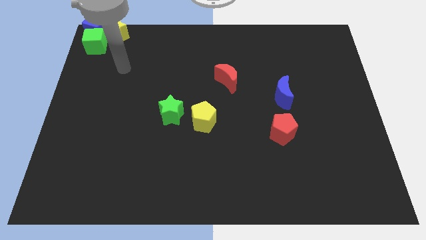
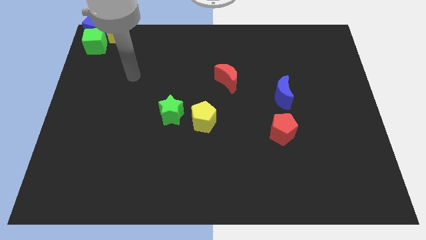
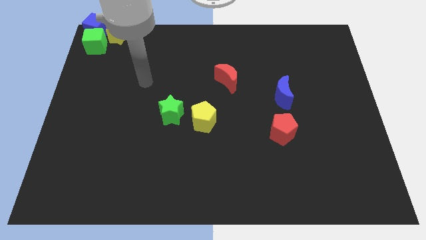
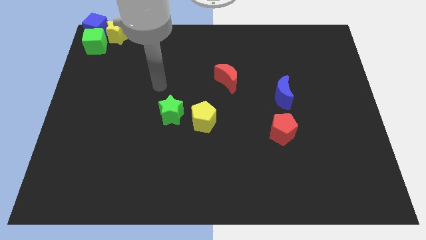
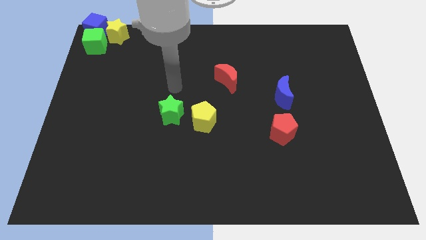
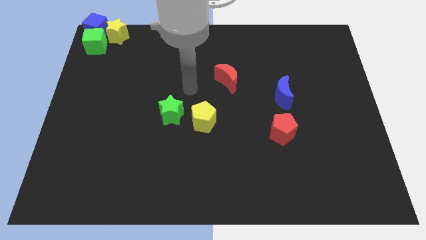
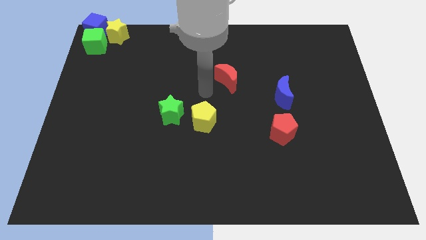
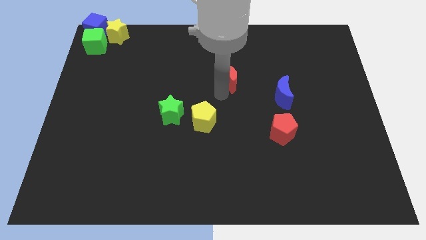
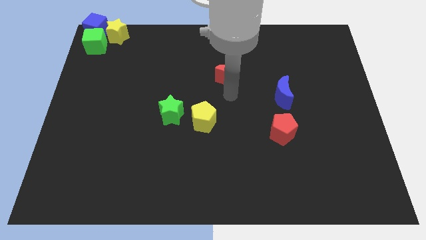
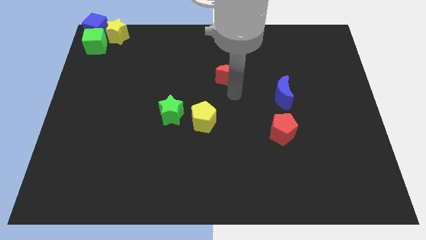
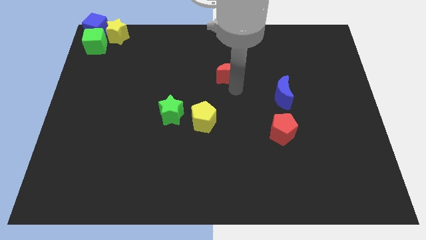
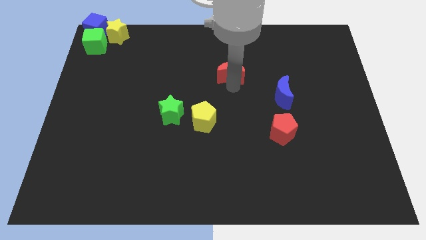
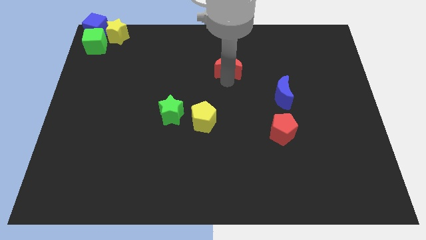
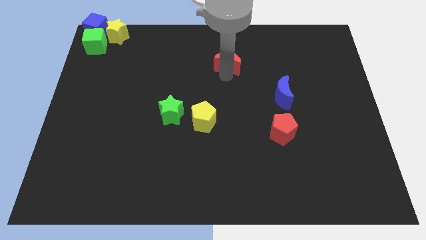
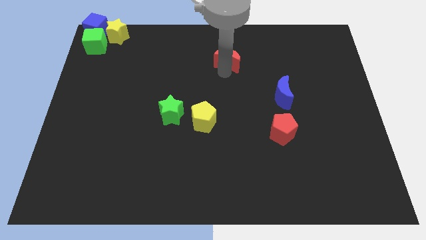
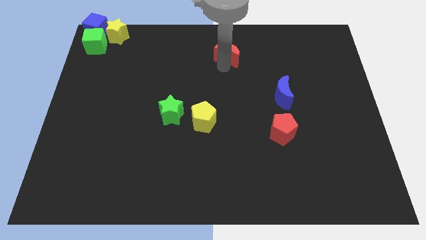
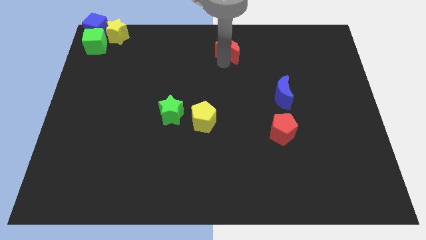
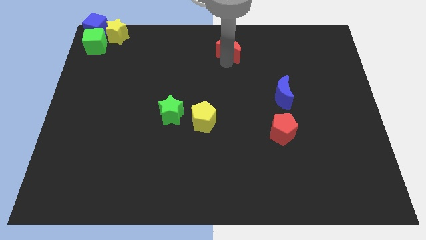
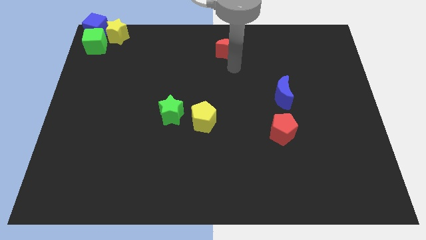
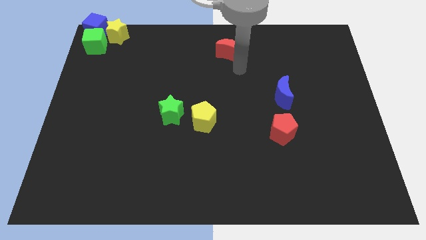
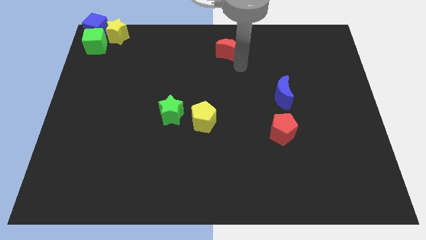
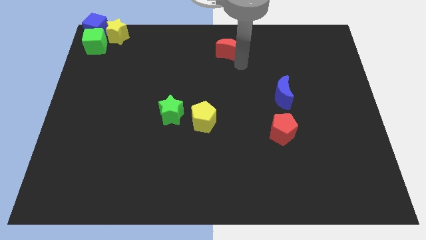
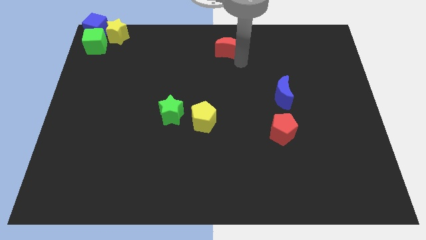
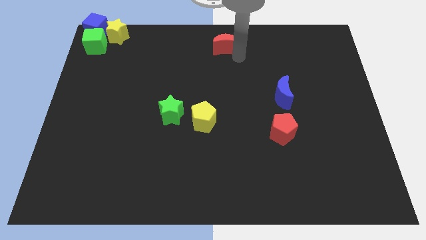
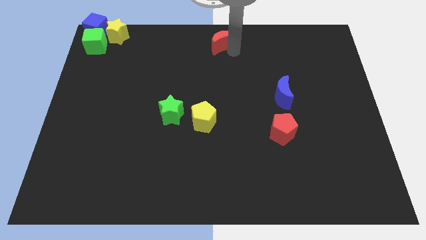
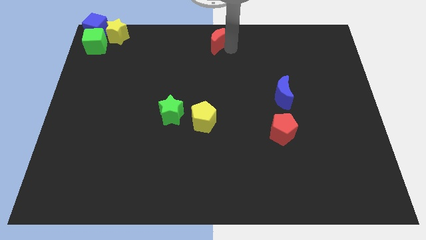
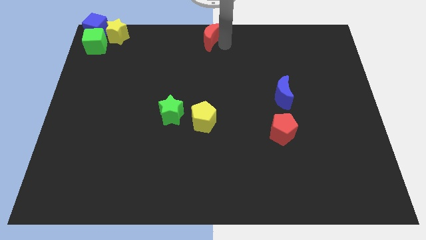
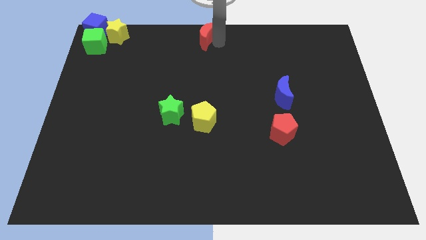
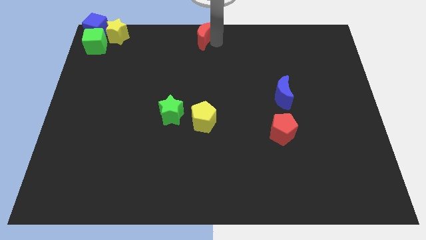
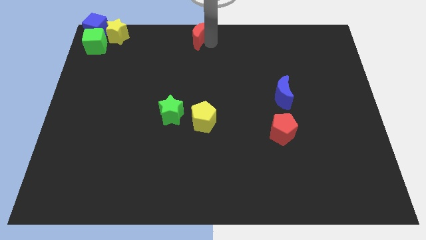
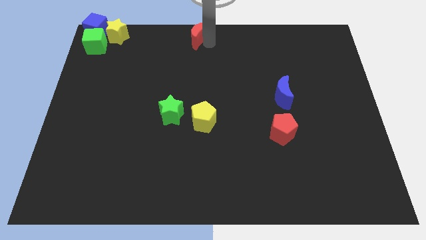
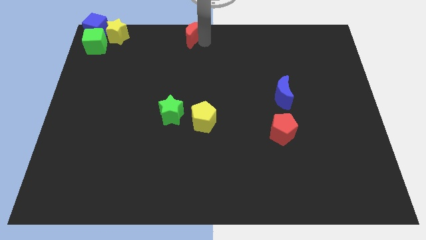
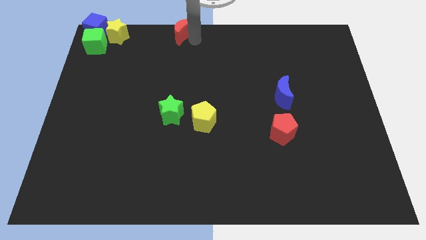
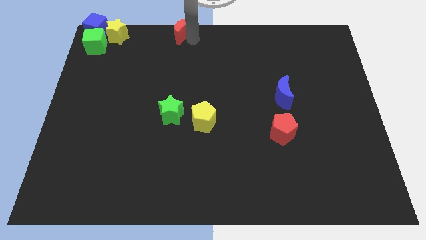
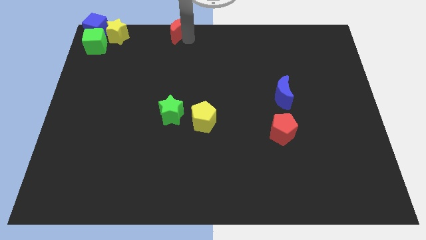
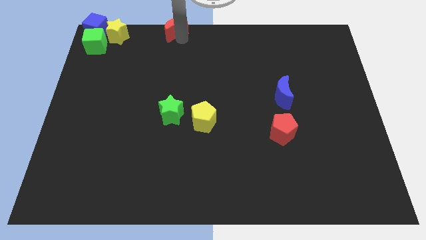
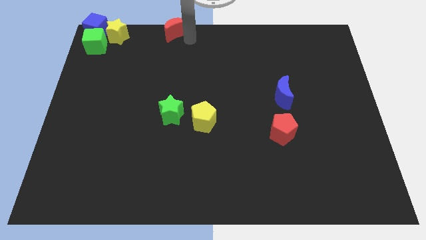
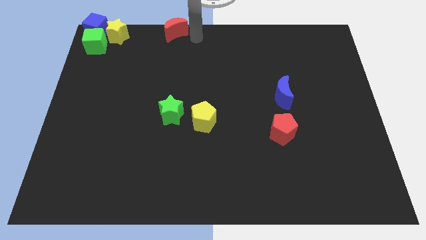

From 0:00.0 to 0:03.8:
move the red moon to top left corner of the board

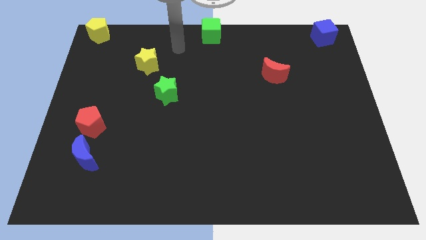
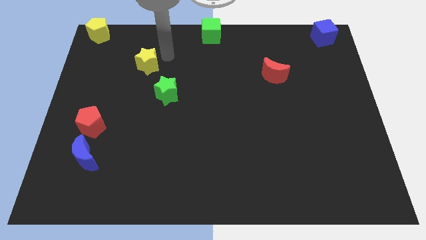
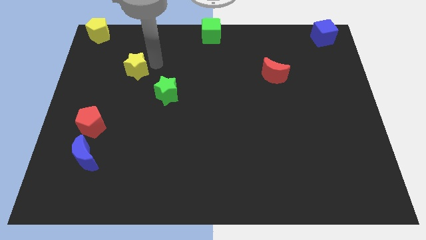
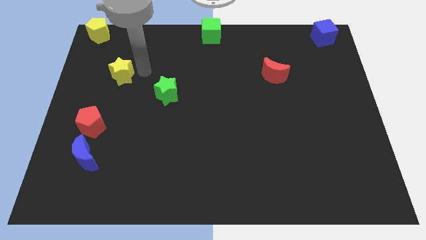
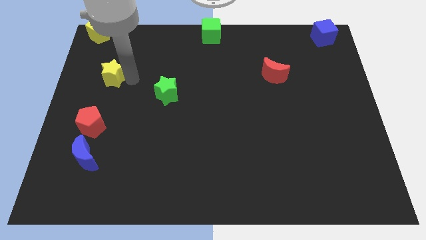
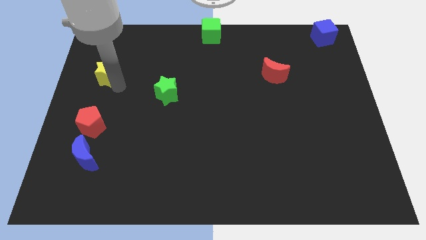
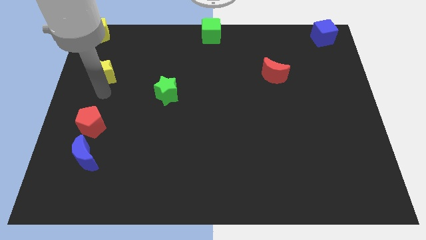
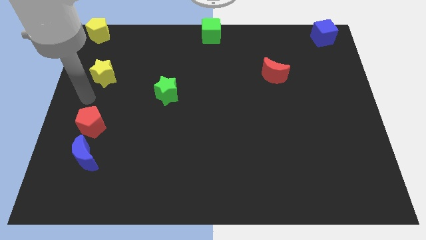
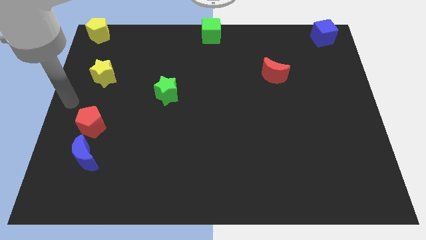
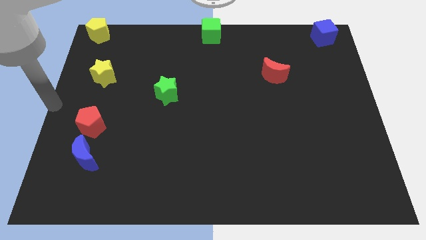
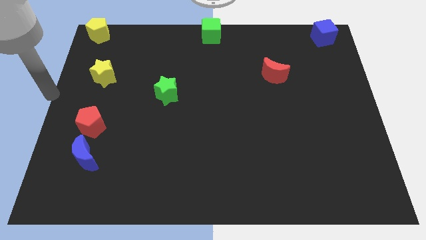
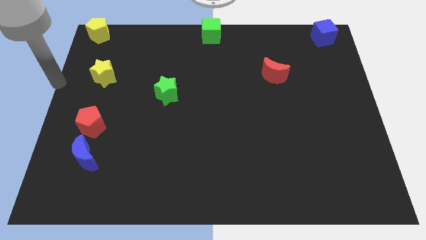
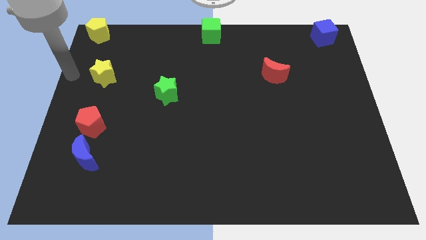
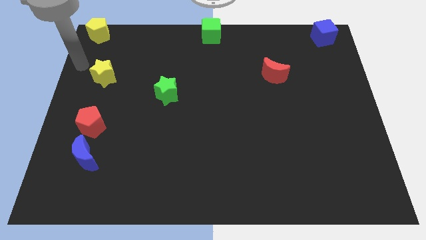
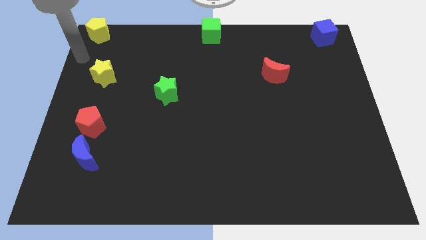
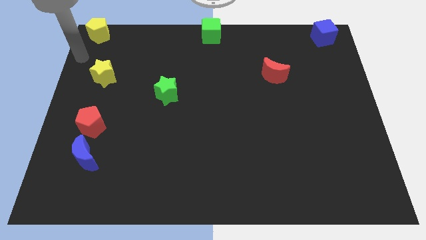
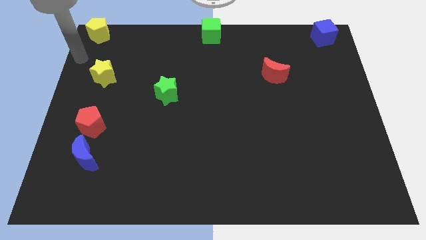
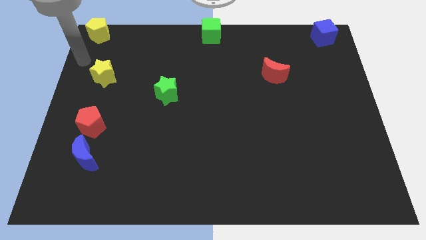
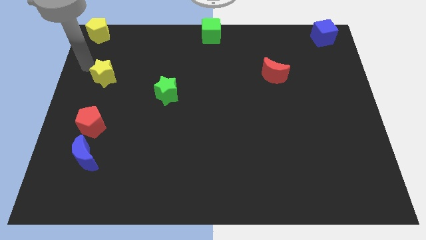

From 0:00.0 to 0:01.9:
place the yellow star between the yellow pentagon and the red pentagon

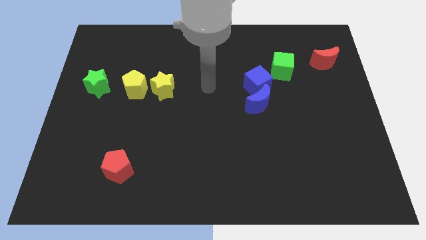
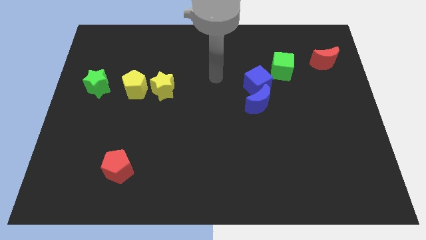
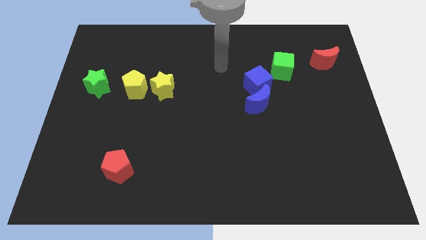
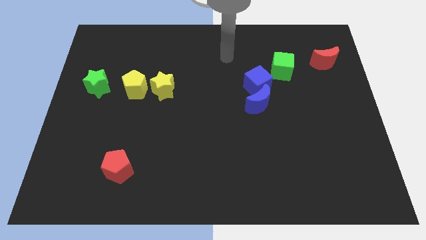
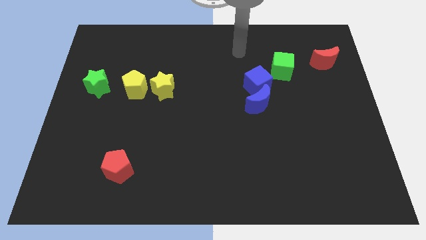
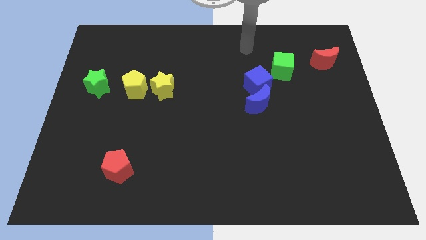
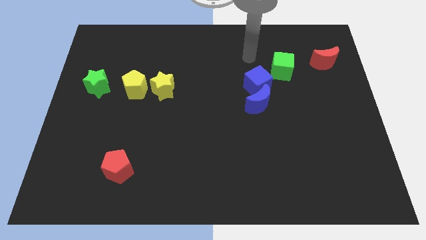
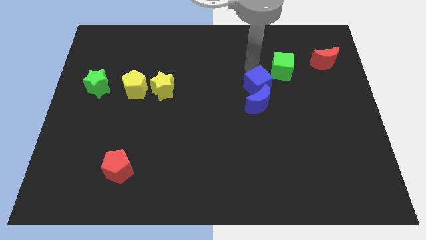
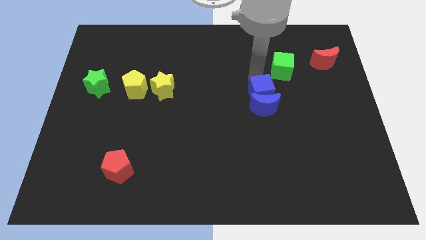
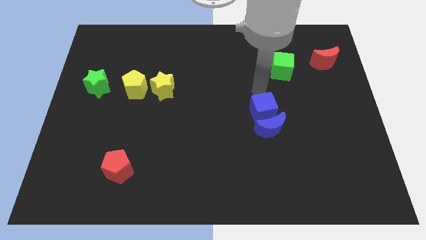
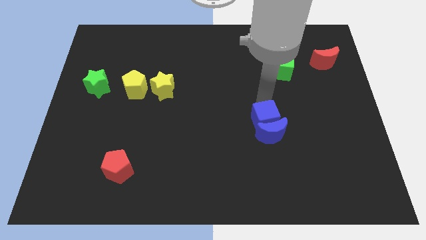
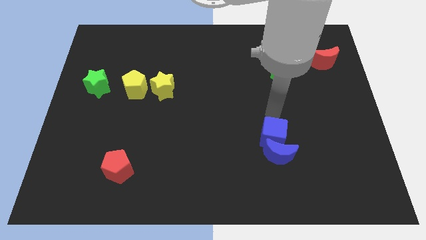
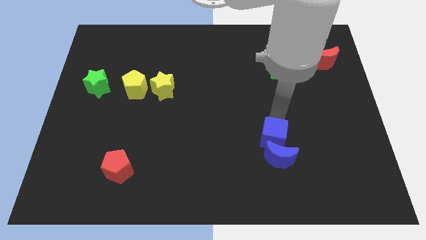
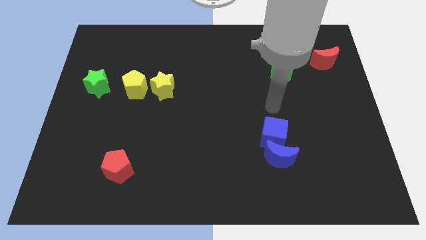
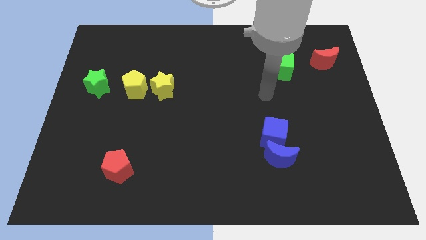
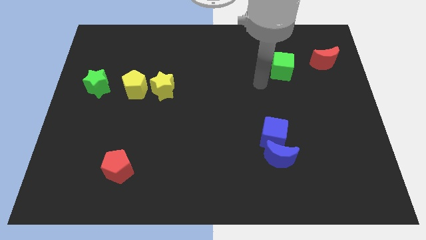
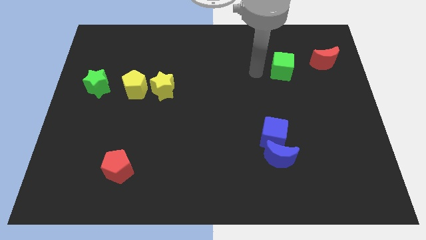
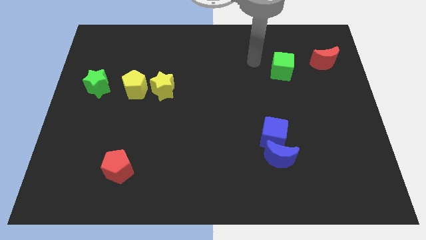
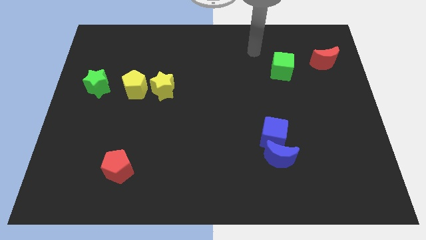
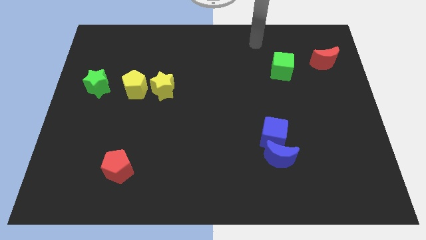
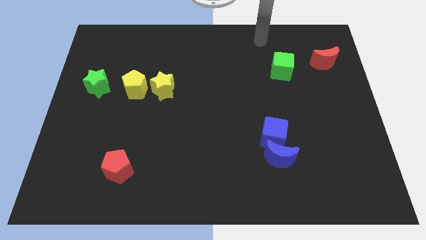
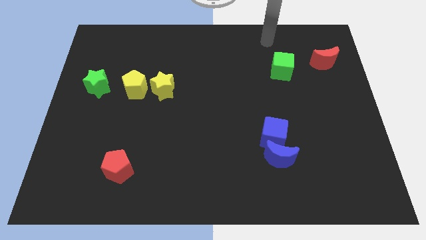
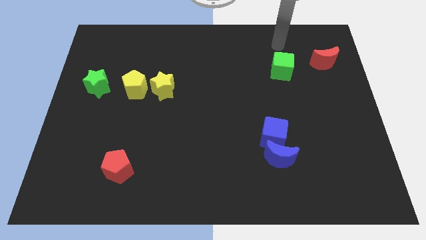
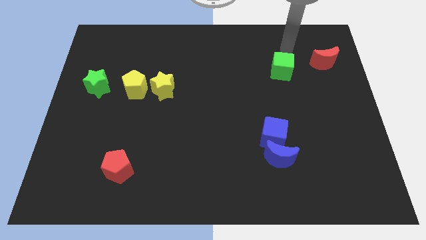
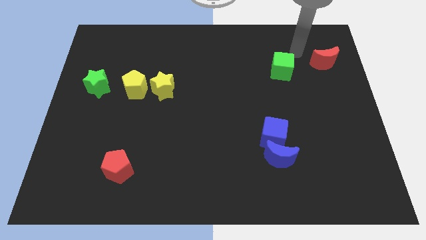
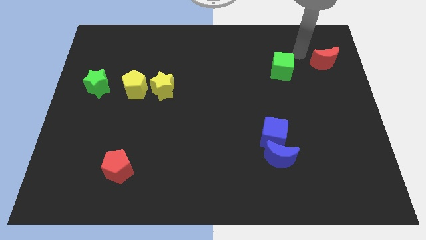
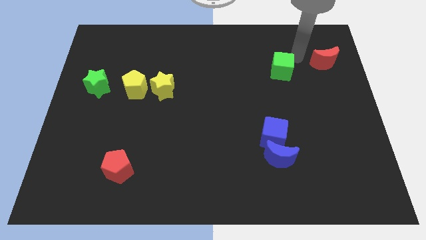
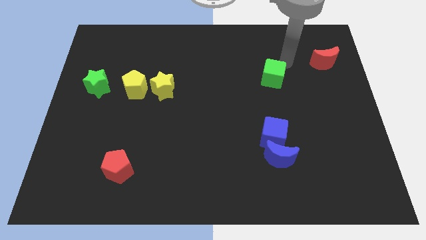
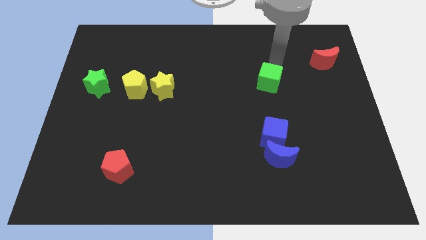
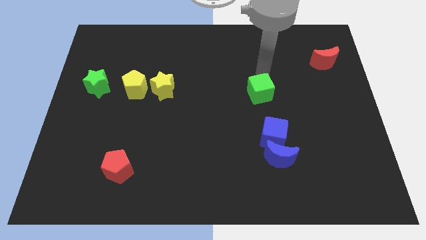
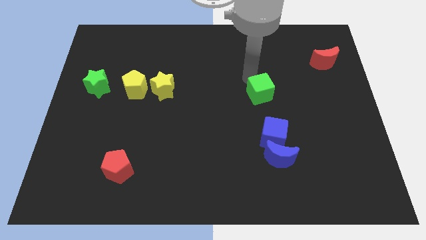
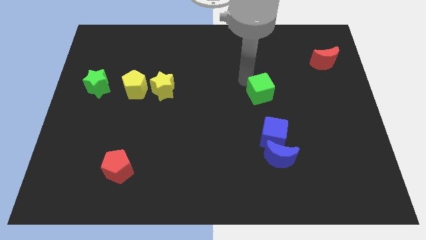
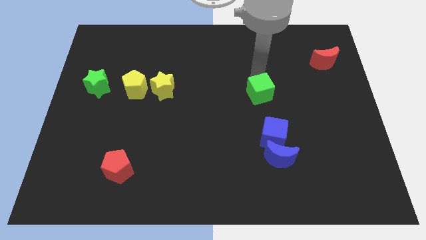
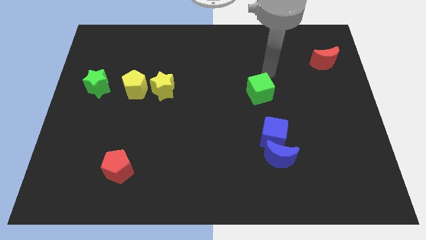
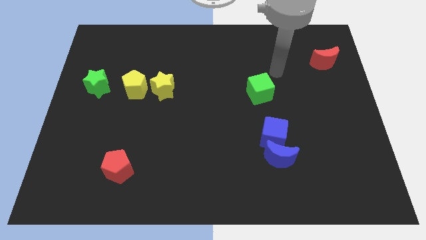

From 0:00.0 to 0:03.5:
arrange both the blue blocks and green cube diagonal to each other
